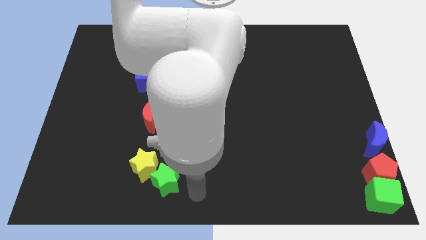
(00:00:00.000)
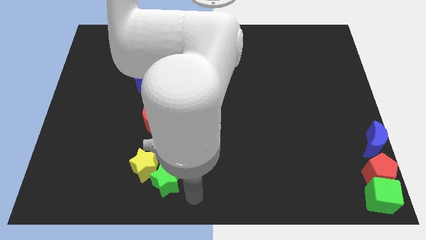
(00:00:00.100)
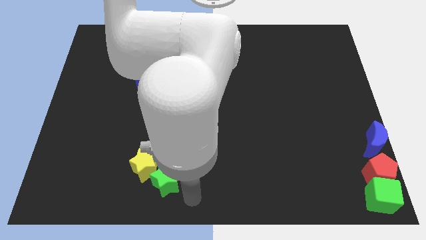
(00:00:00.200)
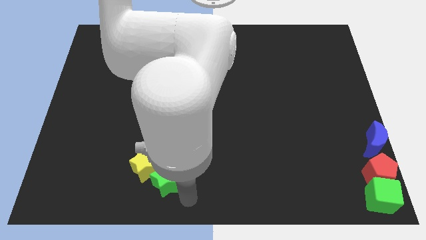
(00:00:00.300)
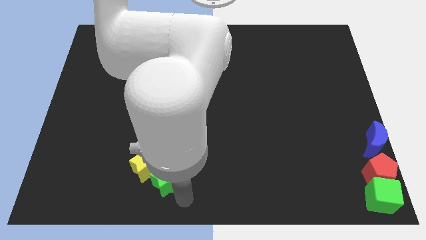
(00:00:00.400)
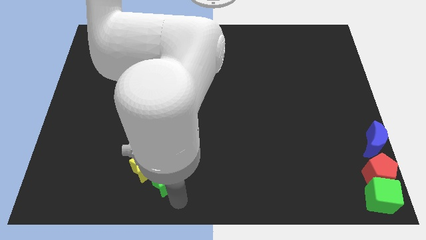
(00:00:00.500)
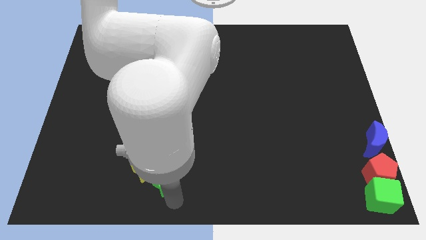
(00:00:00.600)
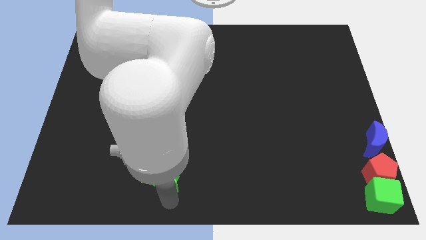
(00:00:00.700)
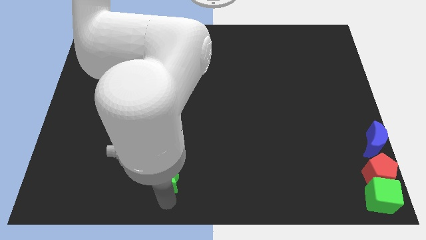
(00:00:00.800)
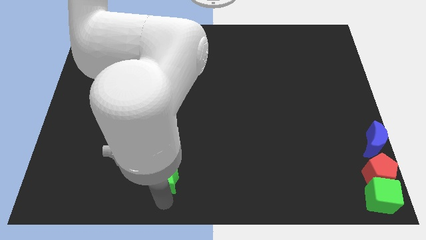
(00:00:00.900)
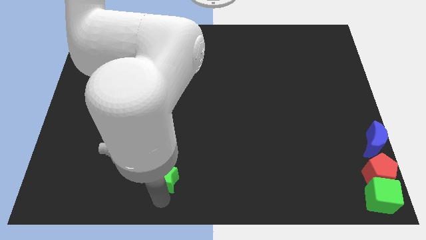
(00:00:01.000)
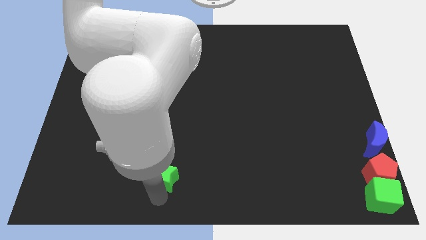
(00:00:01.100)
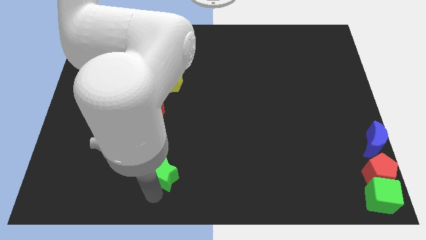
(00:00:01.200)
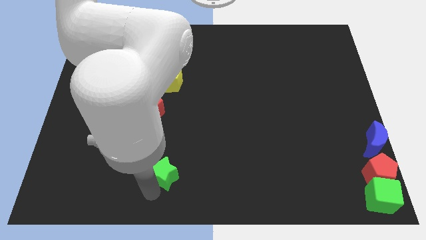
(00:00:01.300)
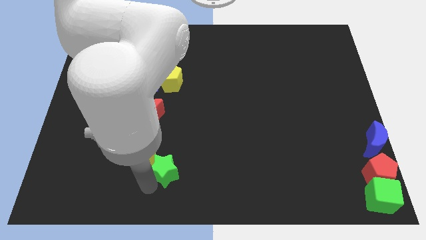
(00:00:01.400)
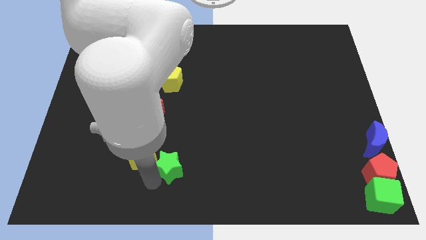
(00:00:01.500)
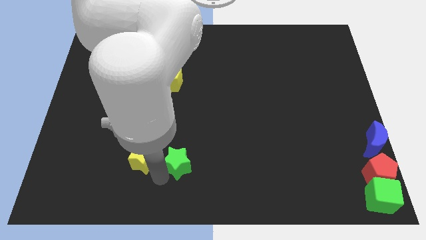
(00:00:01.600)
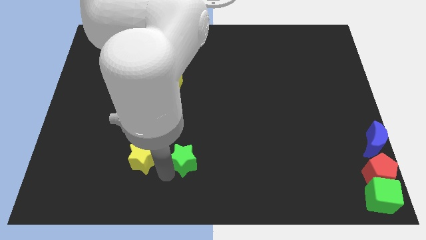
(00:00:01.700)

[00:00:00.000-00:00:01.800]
place the green star to the right of the yellow star

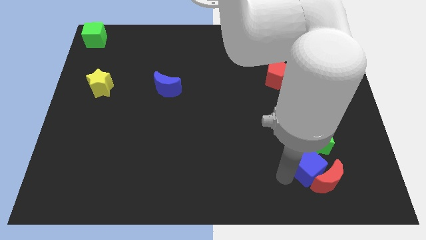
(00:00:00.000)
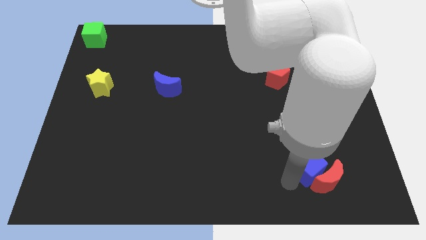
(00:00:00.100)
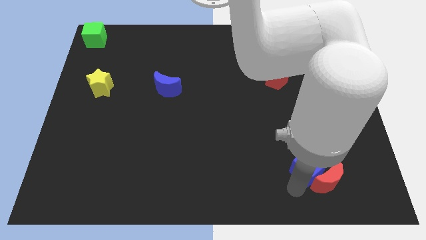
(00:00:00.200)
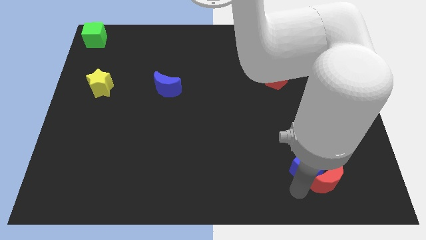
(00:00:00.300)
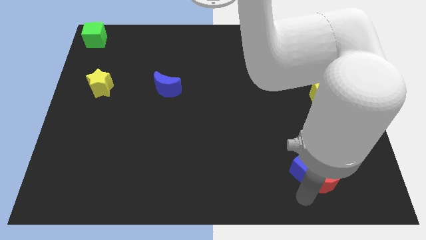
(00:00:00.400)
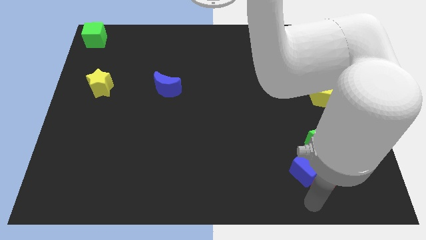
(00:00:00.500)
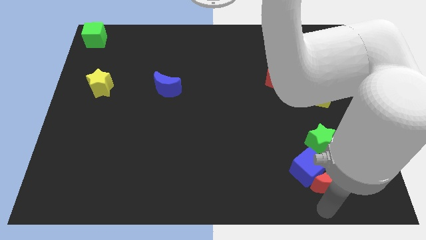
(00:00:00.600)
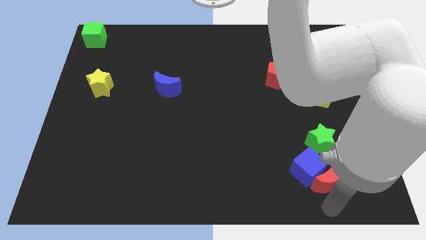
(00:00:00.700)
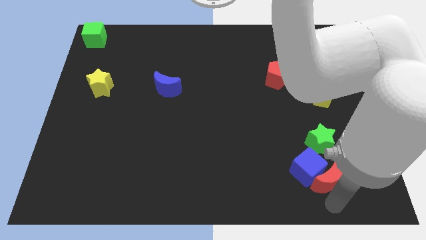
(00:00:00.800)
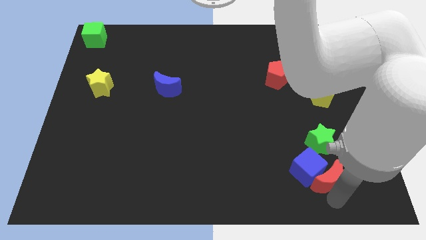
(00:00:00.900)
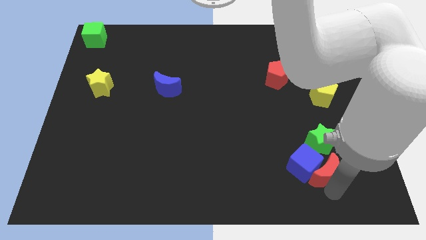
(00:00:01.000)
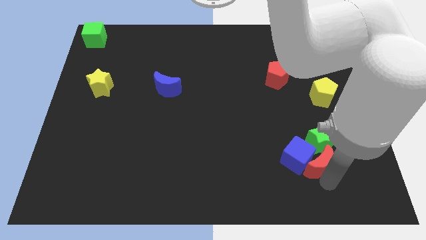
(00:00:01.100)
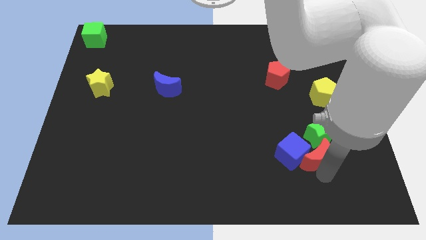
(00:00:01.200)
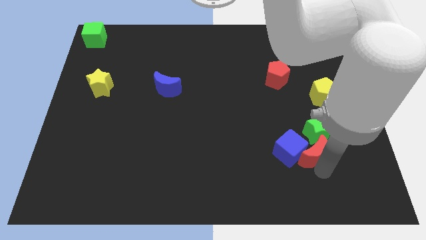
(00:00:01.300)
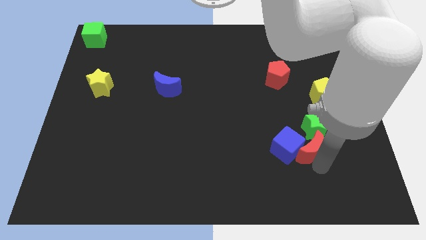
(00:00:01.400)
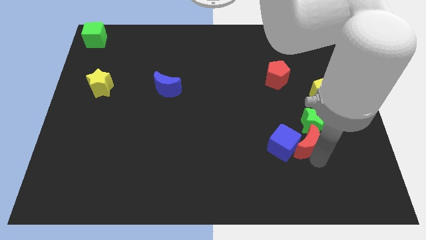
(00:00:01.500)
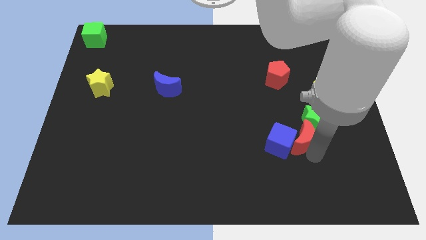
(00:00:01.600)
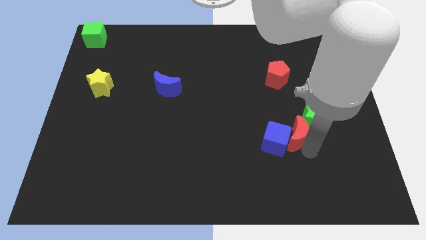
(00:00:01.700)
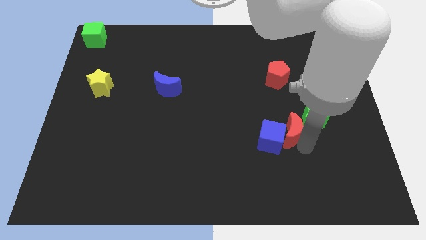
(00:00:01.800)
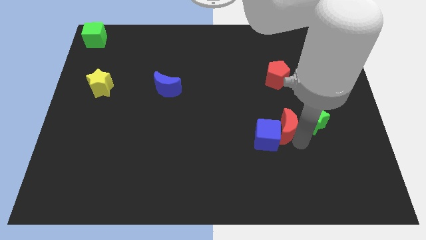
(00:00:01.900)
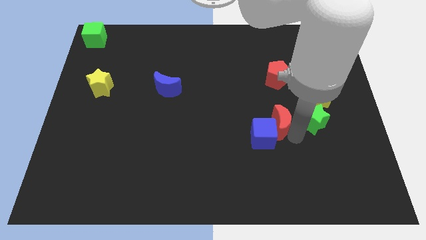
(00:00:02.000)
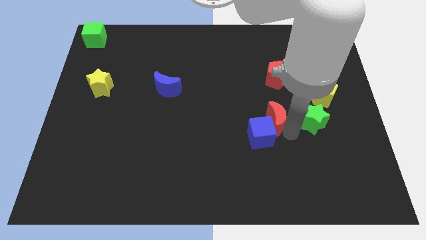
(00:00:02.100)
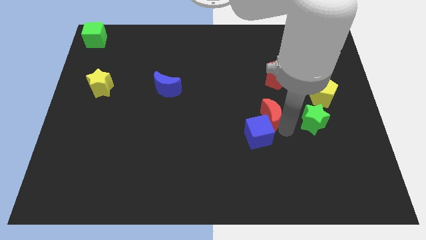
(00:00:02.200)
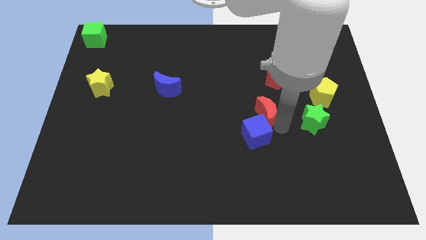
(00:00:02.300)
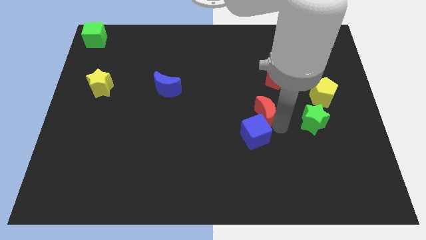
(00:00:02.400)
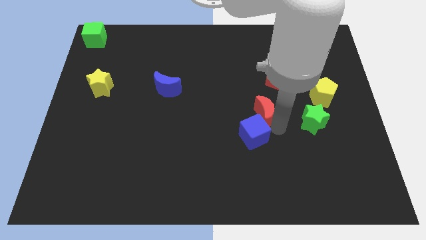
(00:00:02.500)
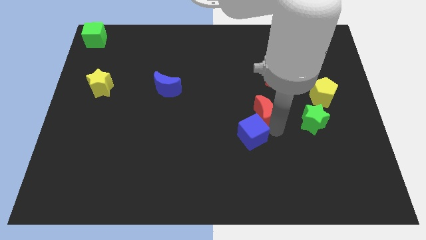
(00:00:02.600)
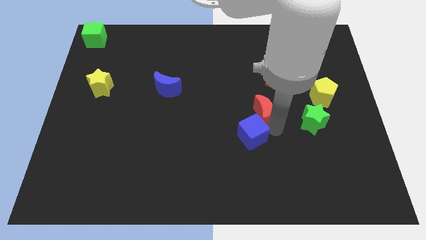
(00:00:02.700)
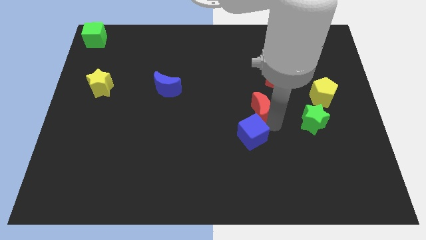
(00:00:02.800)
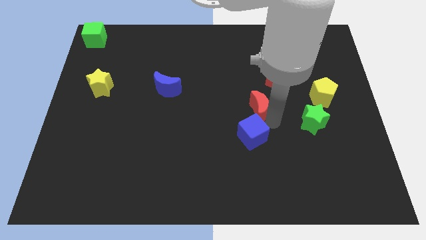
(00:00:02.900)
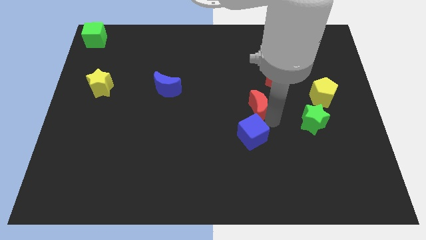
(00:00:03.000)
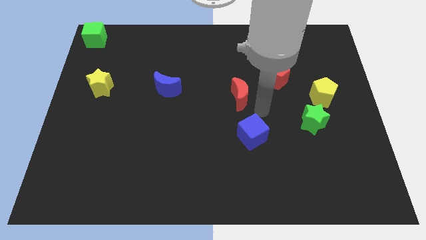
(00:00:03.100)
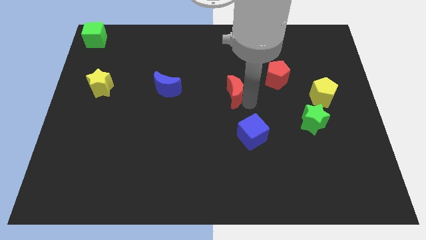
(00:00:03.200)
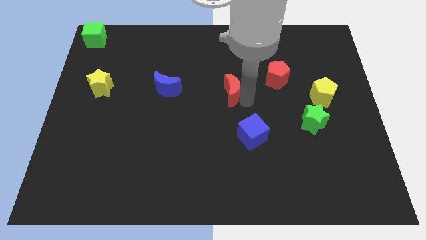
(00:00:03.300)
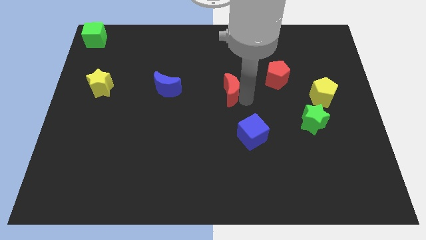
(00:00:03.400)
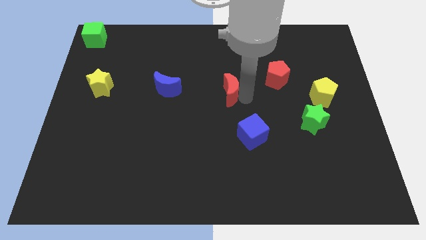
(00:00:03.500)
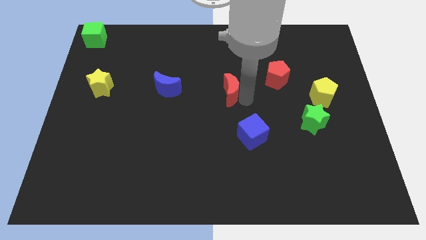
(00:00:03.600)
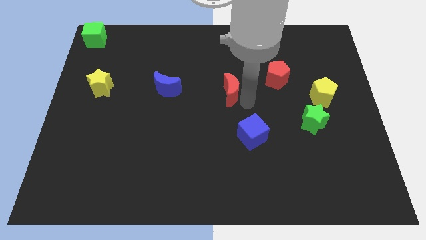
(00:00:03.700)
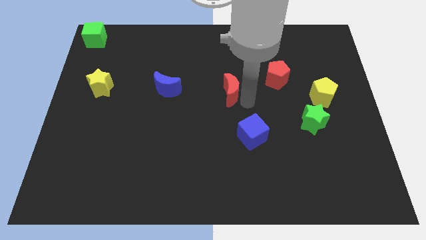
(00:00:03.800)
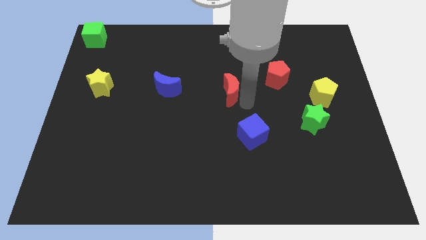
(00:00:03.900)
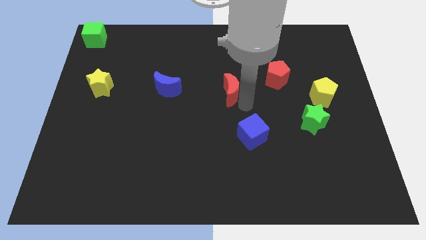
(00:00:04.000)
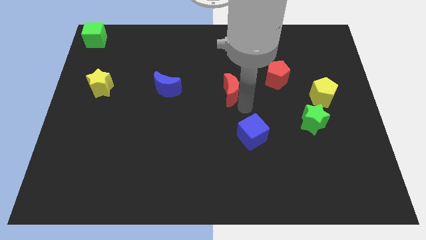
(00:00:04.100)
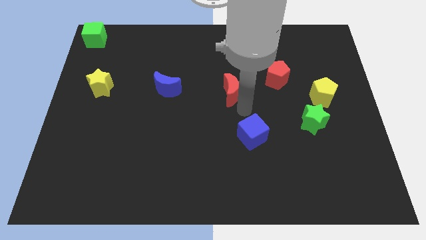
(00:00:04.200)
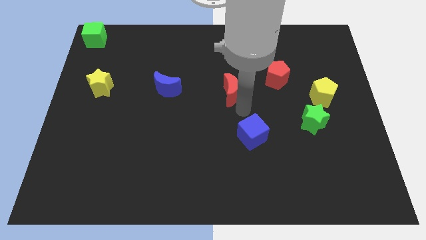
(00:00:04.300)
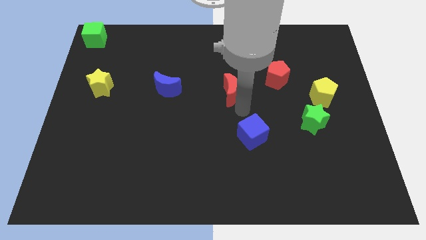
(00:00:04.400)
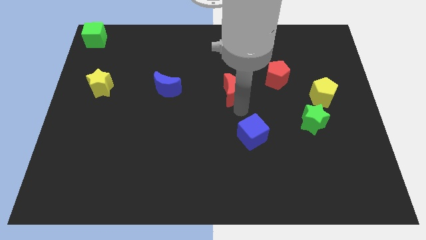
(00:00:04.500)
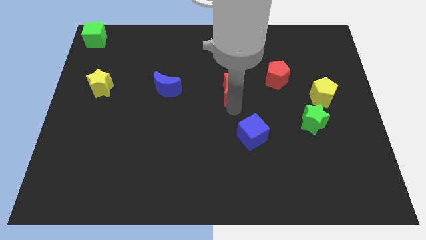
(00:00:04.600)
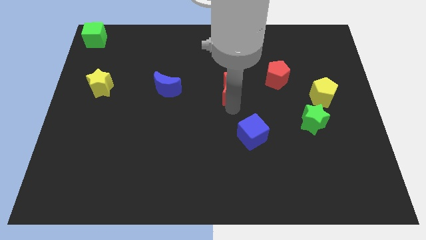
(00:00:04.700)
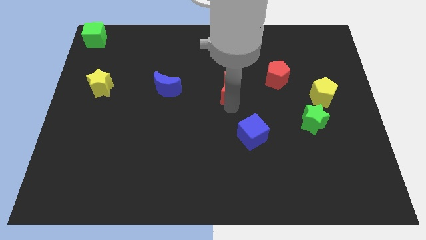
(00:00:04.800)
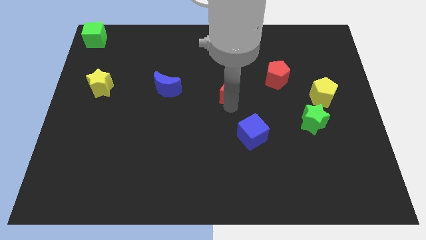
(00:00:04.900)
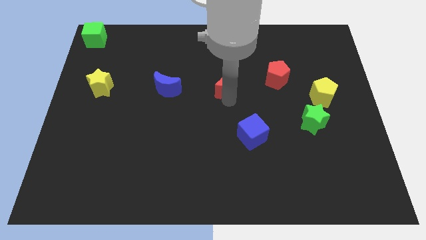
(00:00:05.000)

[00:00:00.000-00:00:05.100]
slide the red moon to the right side of the blue moon

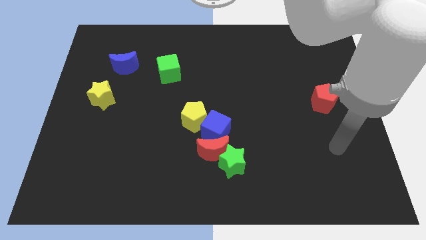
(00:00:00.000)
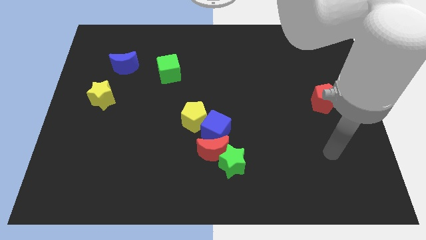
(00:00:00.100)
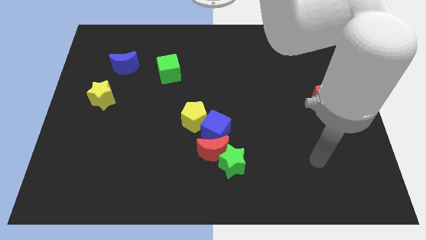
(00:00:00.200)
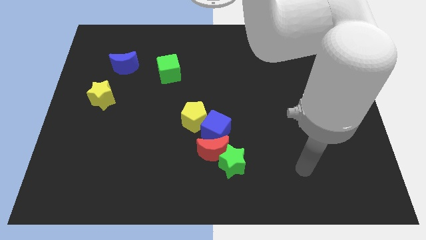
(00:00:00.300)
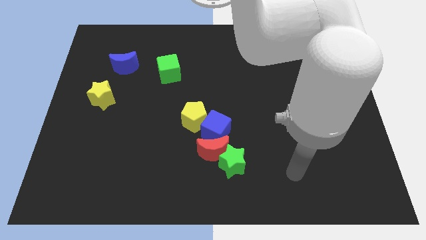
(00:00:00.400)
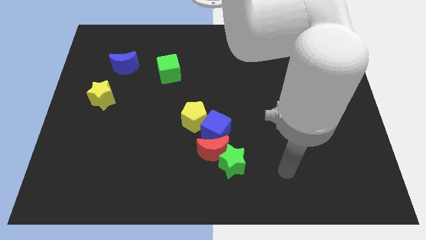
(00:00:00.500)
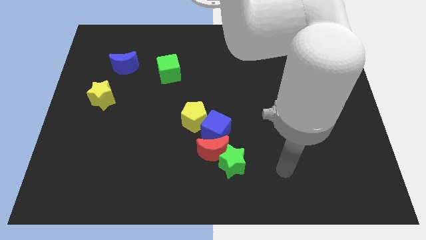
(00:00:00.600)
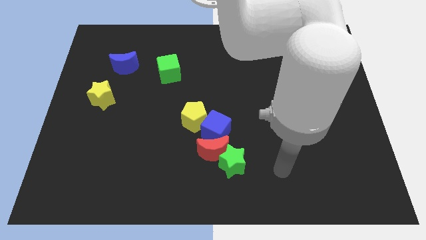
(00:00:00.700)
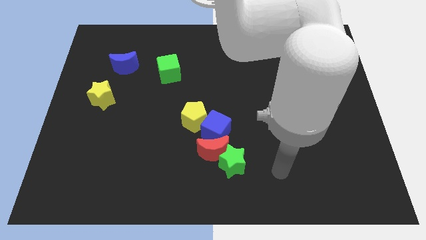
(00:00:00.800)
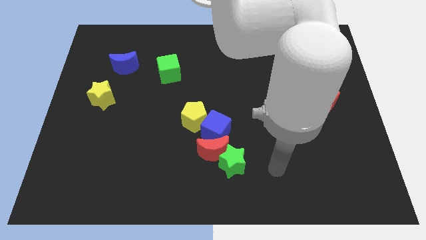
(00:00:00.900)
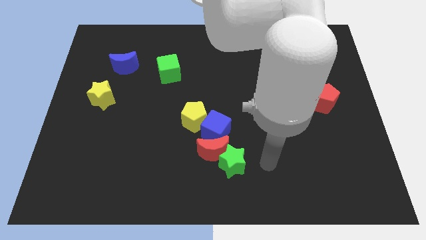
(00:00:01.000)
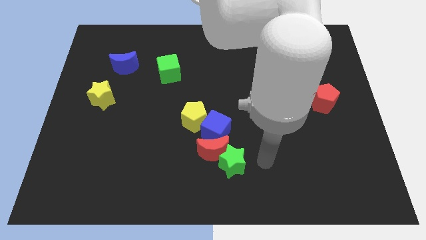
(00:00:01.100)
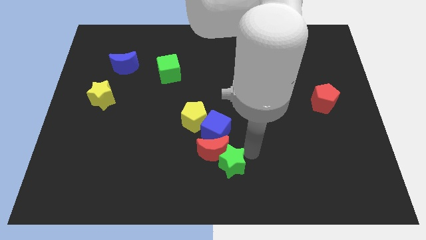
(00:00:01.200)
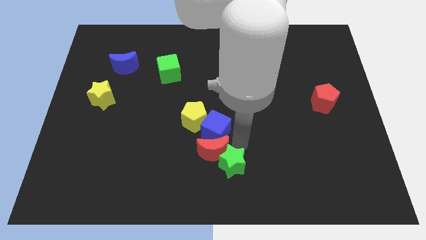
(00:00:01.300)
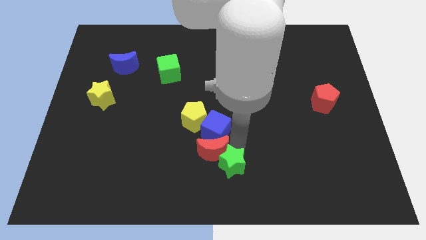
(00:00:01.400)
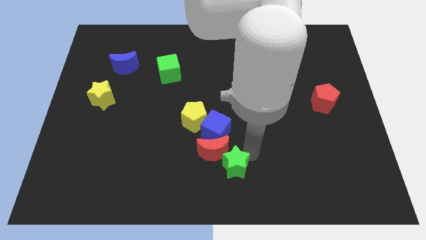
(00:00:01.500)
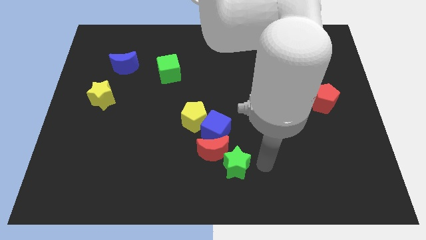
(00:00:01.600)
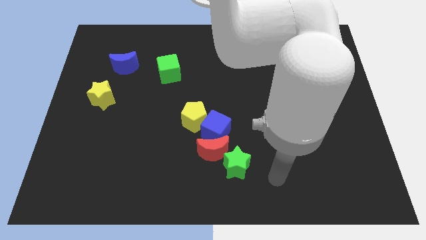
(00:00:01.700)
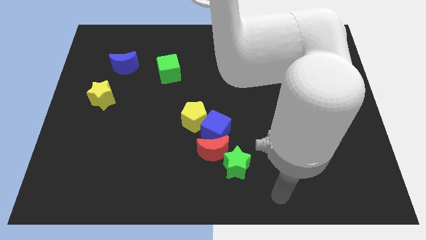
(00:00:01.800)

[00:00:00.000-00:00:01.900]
slightly touch the green star
